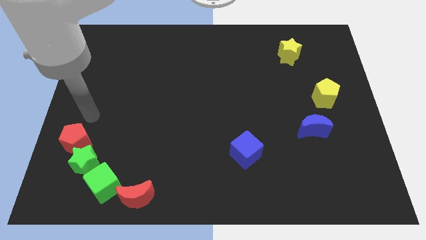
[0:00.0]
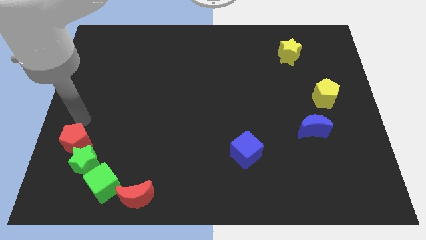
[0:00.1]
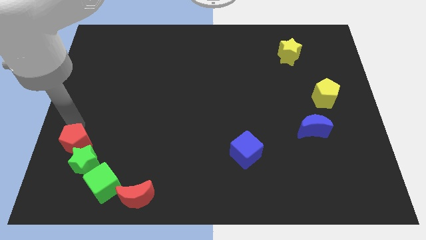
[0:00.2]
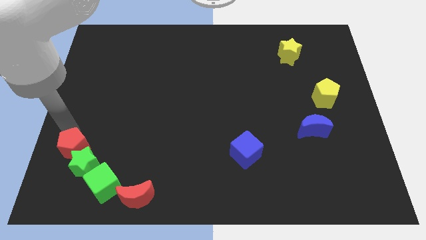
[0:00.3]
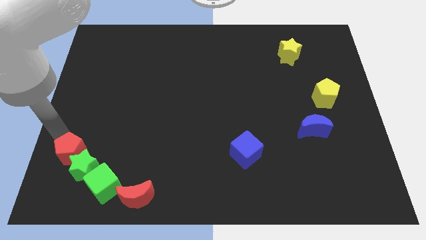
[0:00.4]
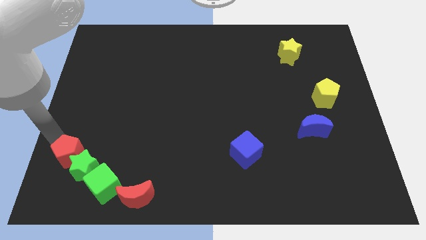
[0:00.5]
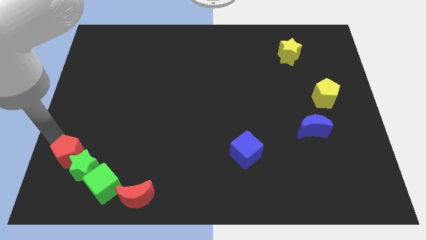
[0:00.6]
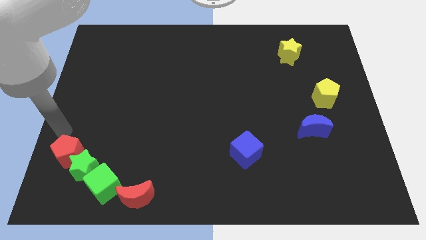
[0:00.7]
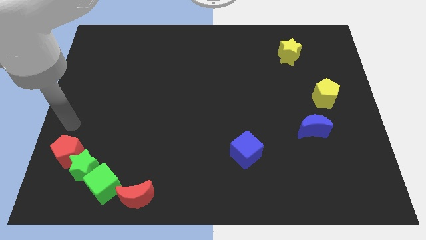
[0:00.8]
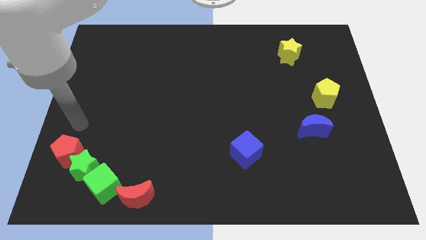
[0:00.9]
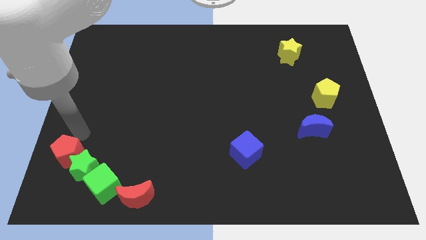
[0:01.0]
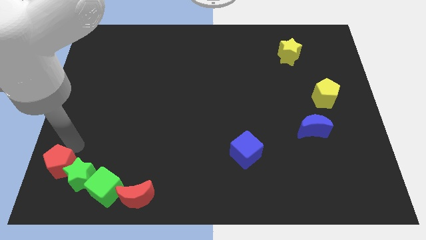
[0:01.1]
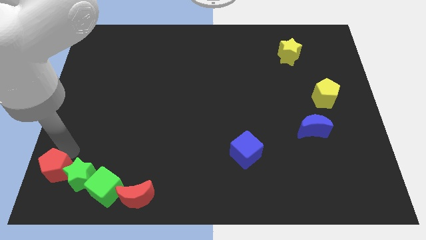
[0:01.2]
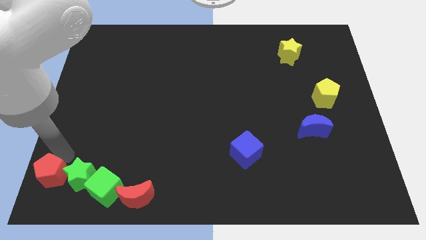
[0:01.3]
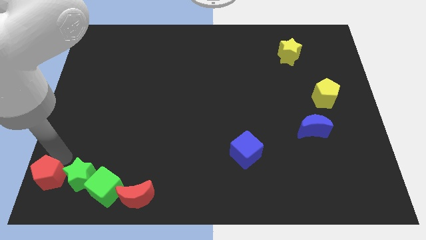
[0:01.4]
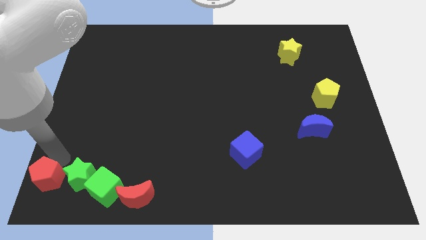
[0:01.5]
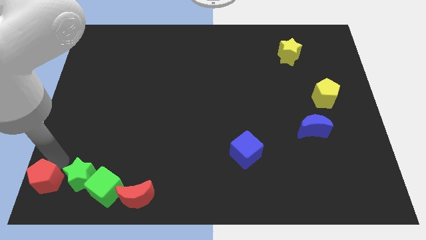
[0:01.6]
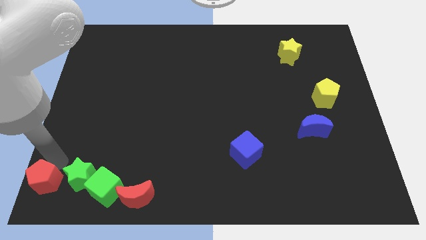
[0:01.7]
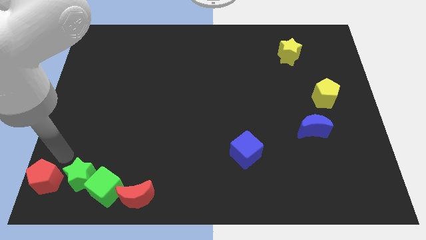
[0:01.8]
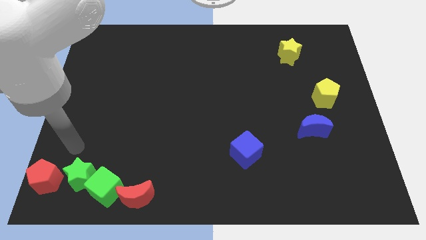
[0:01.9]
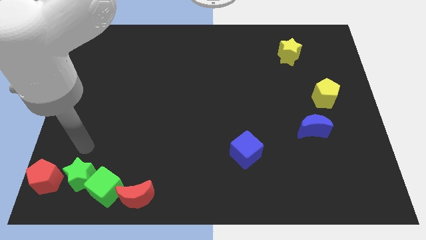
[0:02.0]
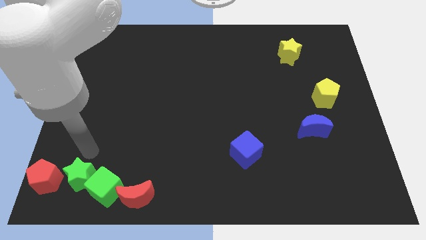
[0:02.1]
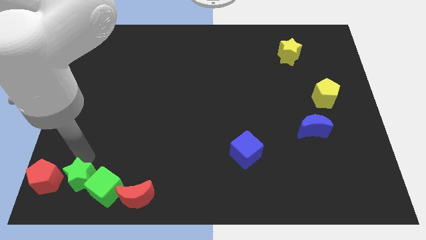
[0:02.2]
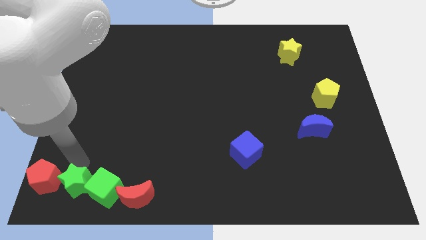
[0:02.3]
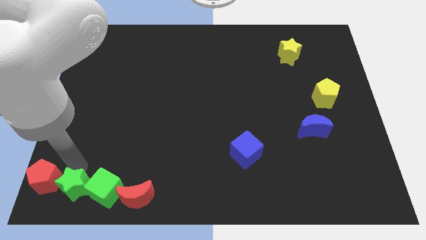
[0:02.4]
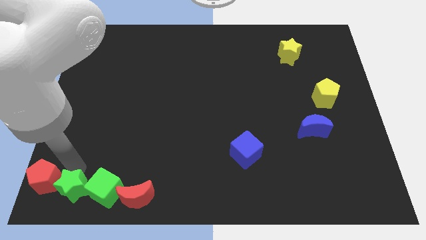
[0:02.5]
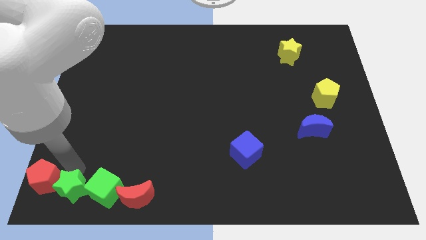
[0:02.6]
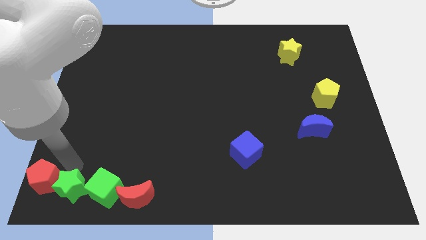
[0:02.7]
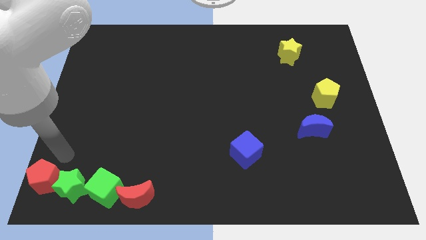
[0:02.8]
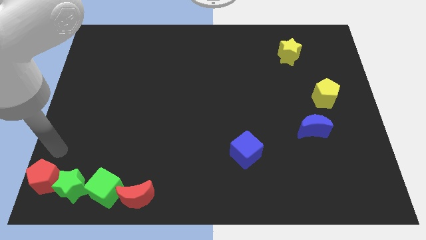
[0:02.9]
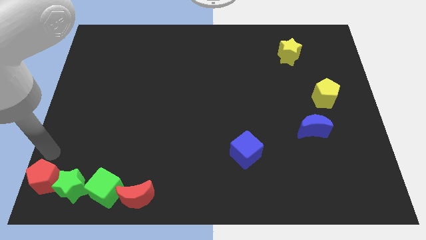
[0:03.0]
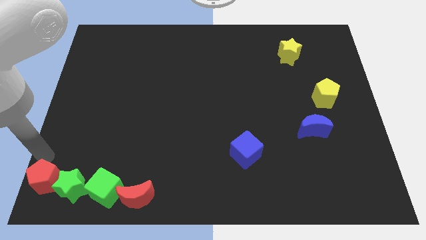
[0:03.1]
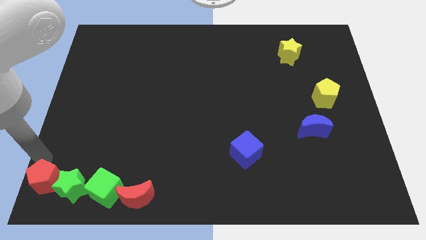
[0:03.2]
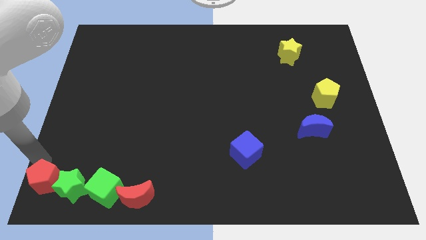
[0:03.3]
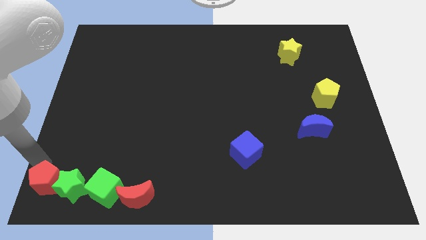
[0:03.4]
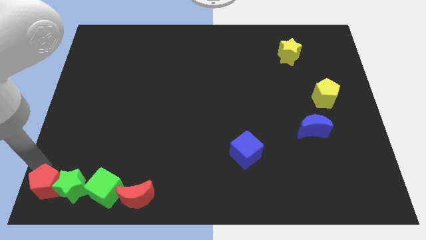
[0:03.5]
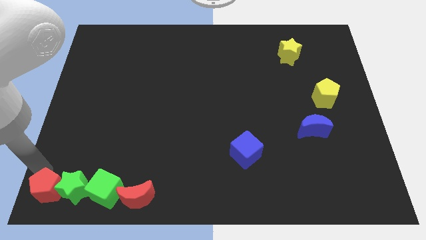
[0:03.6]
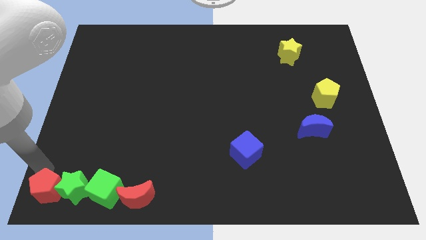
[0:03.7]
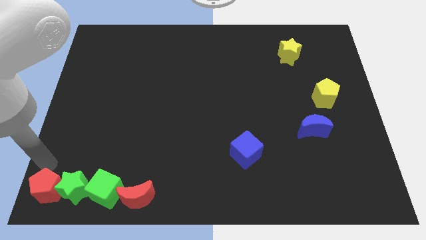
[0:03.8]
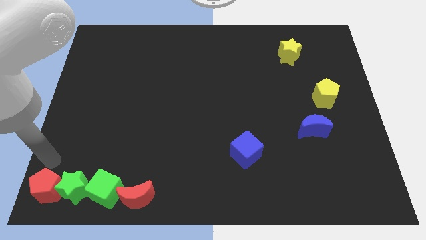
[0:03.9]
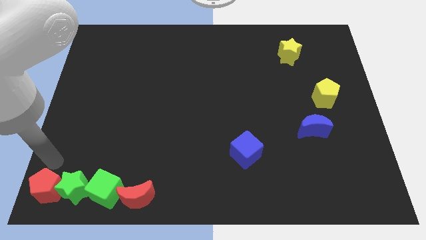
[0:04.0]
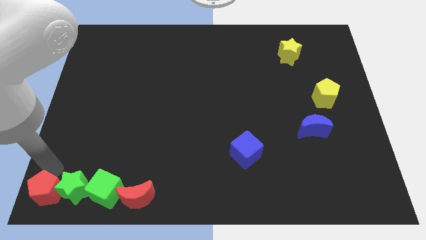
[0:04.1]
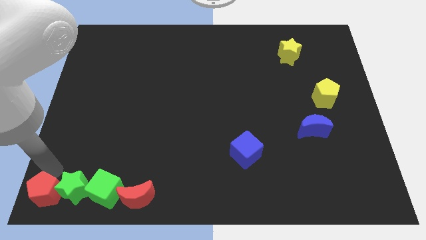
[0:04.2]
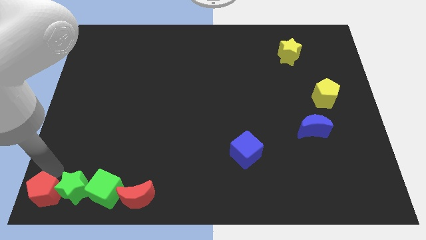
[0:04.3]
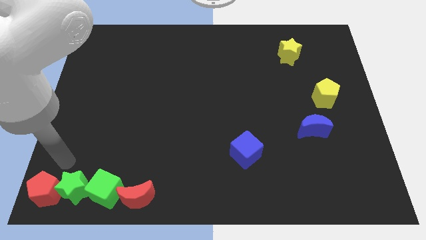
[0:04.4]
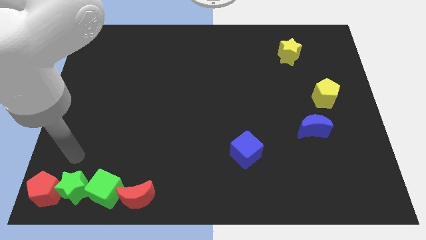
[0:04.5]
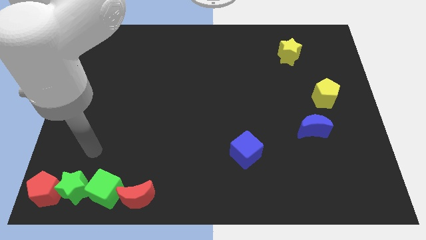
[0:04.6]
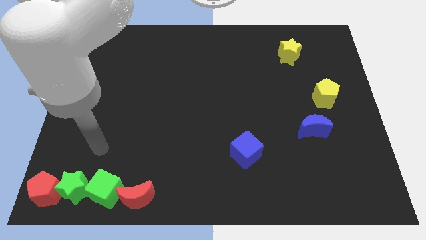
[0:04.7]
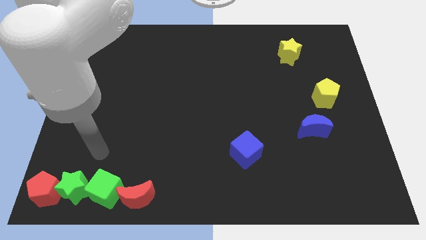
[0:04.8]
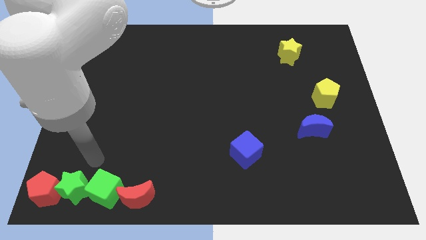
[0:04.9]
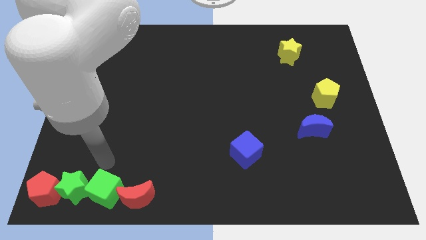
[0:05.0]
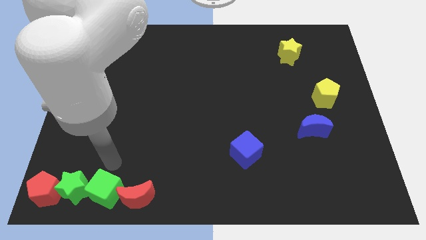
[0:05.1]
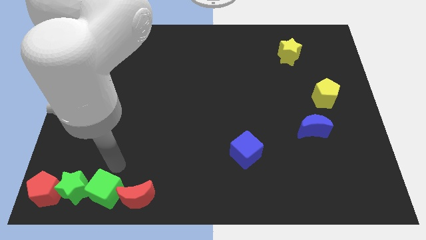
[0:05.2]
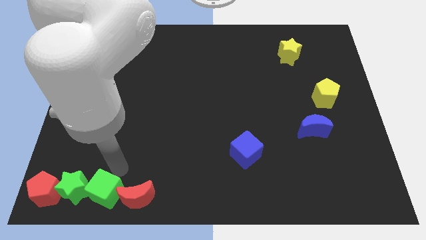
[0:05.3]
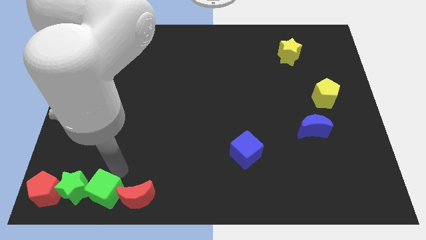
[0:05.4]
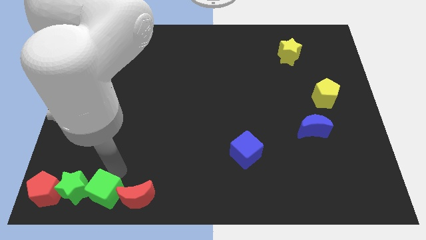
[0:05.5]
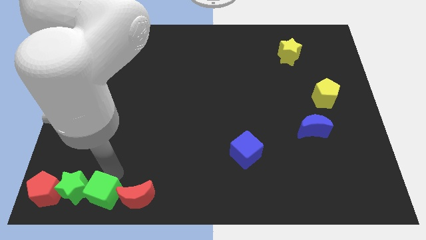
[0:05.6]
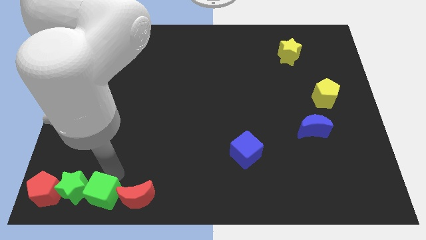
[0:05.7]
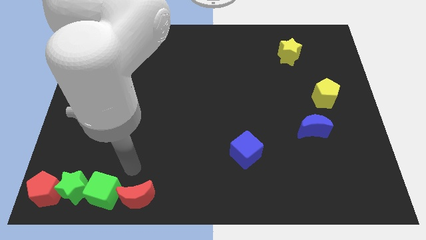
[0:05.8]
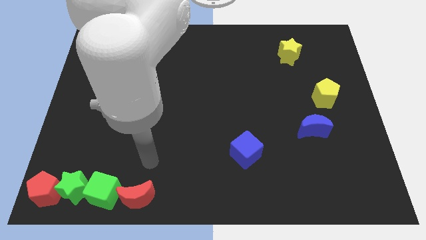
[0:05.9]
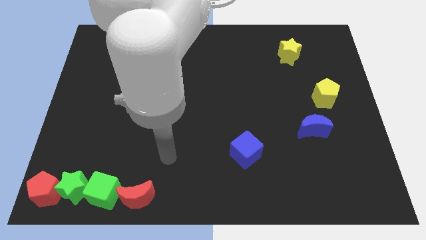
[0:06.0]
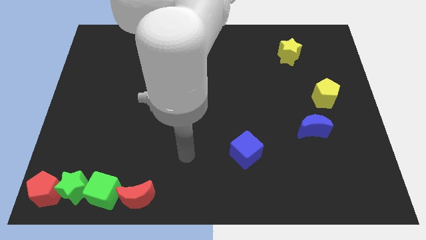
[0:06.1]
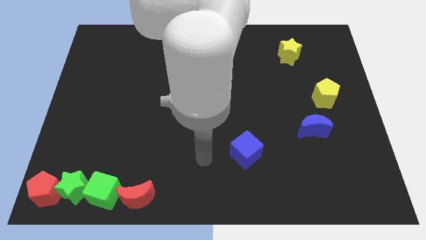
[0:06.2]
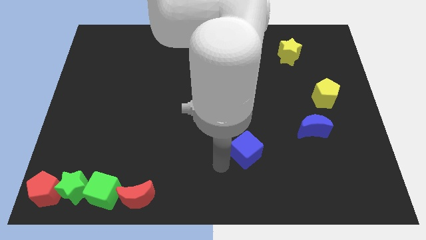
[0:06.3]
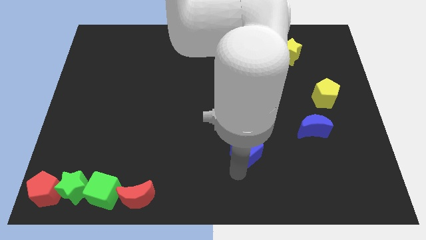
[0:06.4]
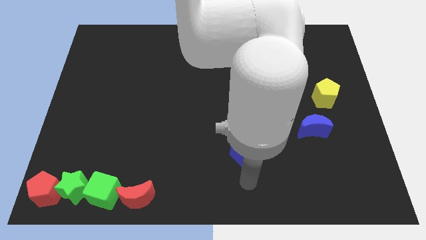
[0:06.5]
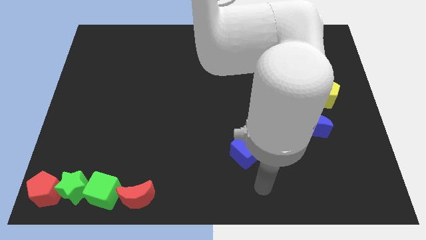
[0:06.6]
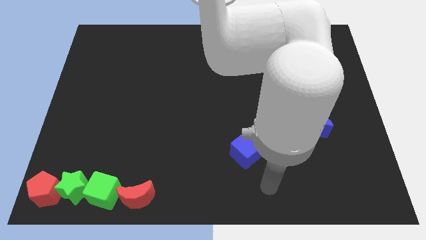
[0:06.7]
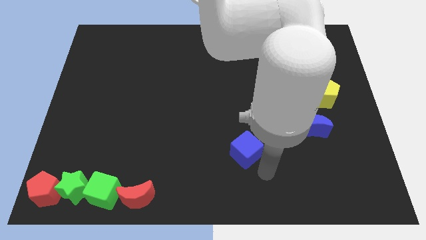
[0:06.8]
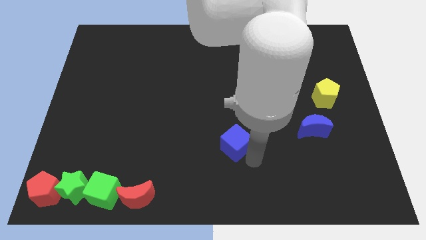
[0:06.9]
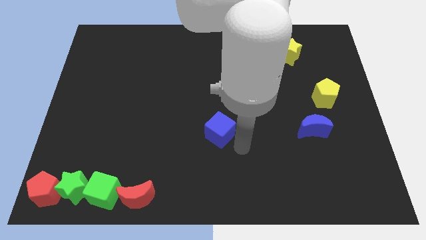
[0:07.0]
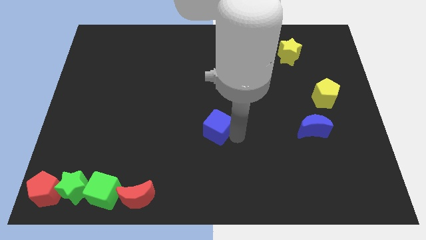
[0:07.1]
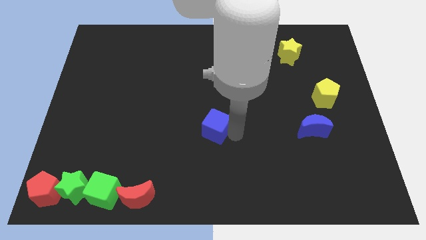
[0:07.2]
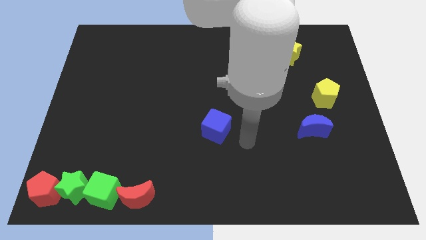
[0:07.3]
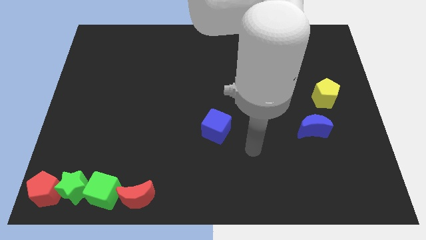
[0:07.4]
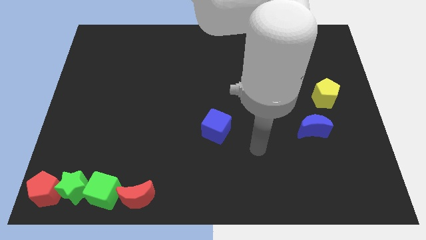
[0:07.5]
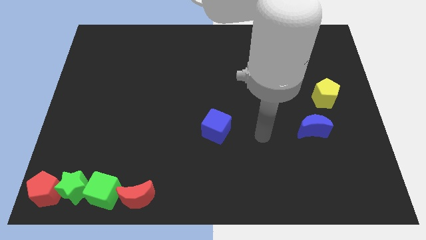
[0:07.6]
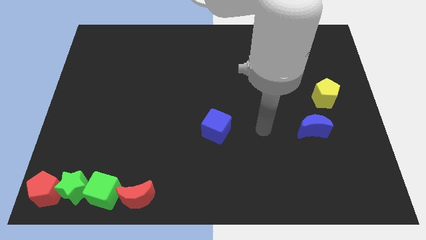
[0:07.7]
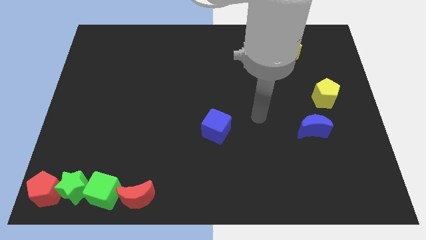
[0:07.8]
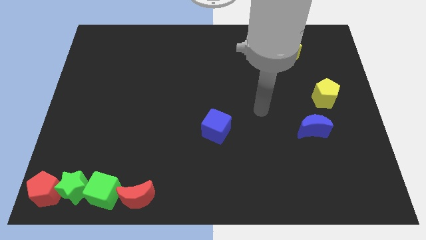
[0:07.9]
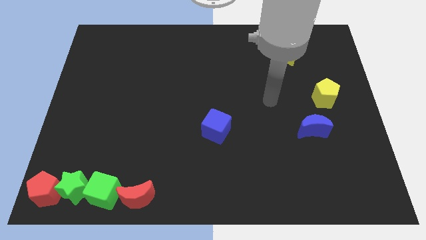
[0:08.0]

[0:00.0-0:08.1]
move blue cube at the center of the board

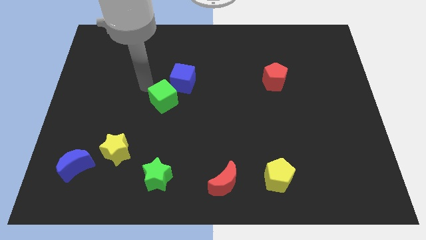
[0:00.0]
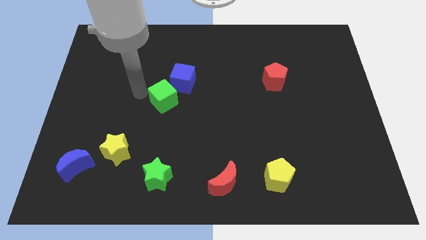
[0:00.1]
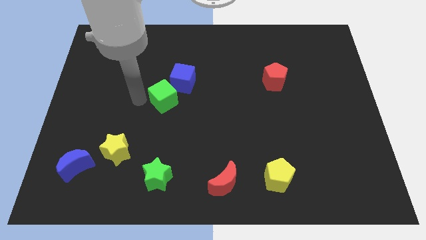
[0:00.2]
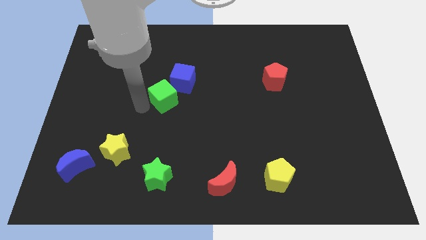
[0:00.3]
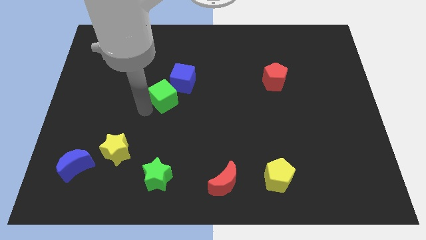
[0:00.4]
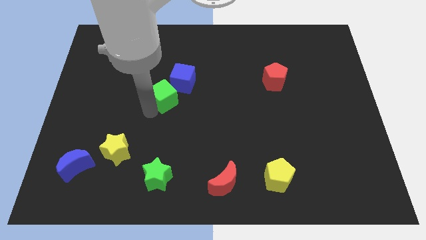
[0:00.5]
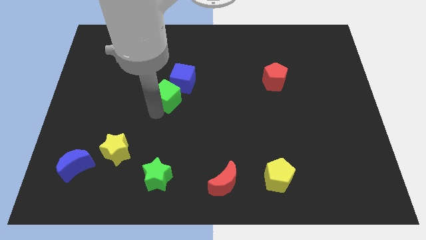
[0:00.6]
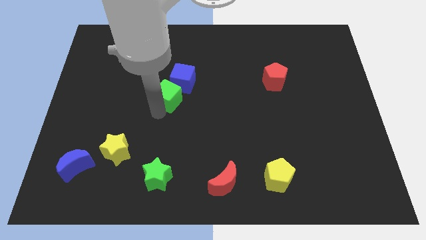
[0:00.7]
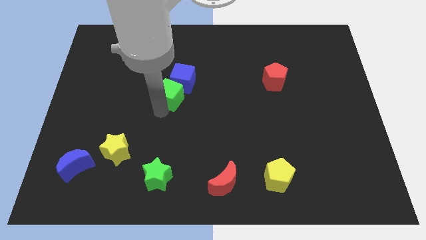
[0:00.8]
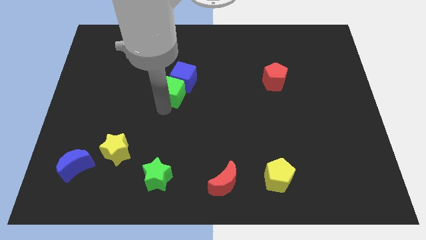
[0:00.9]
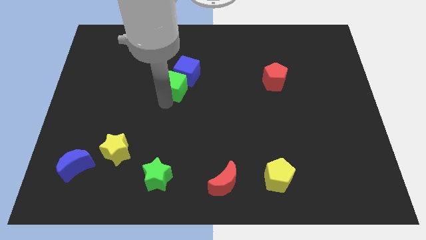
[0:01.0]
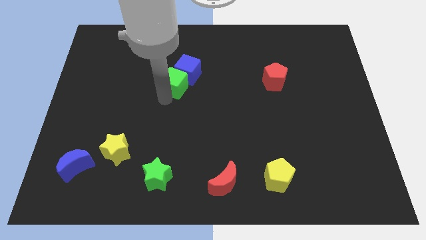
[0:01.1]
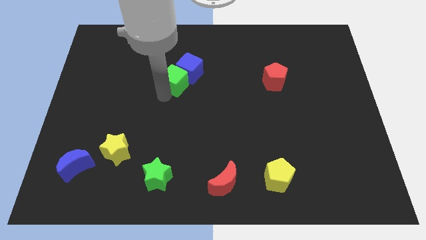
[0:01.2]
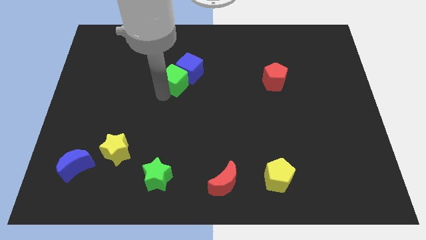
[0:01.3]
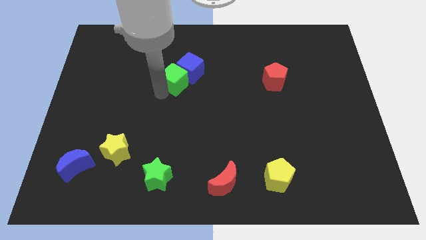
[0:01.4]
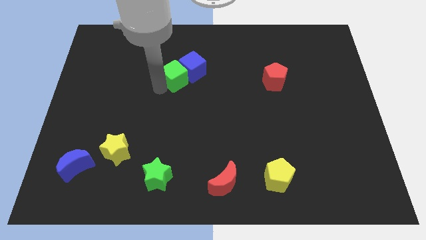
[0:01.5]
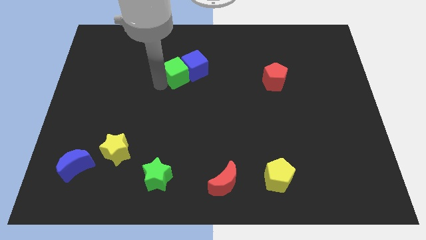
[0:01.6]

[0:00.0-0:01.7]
push the green cube into the blue cube
